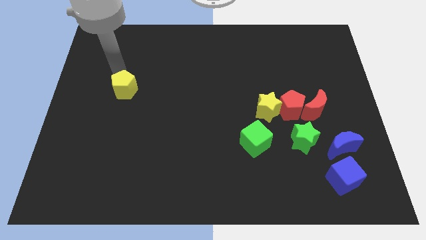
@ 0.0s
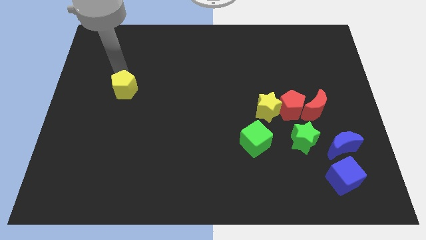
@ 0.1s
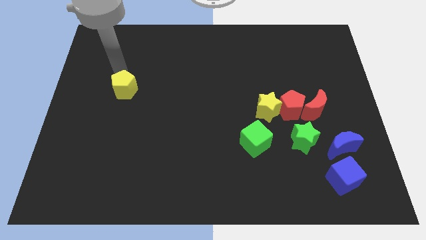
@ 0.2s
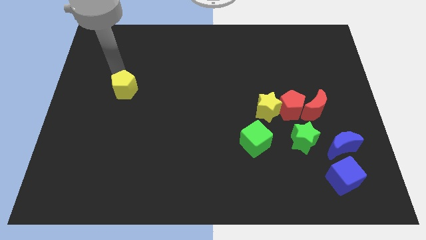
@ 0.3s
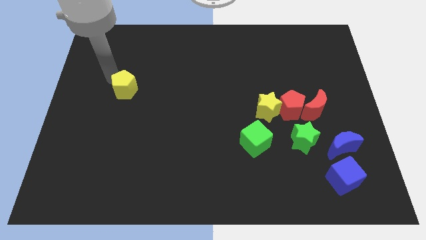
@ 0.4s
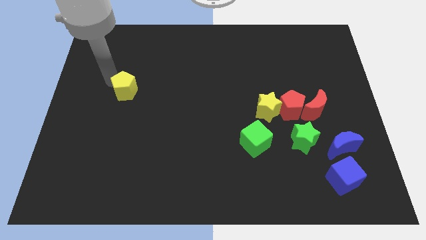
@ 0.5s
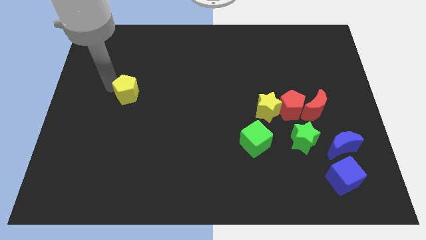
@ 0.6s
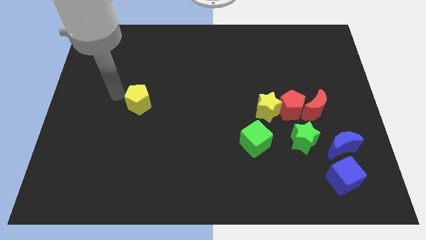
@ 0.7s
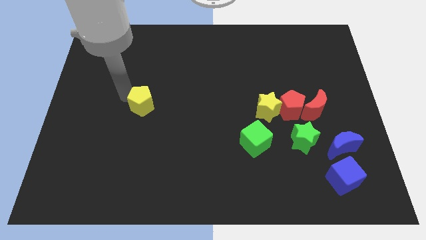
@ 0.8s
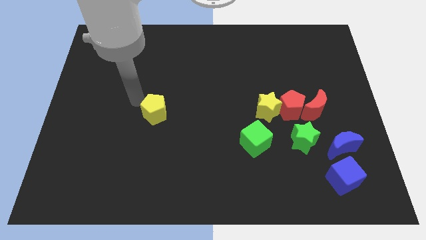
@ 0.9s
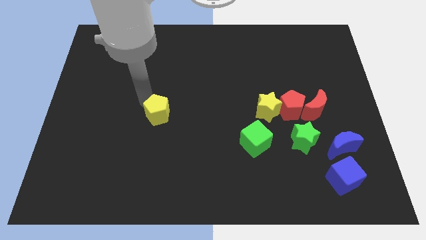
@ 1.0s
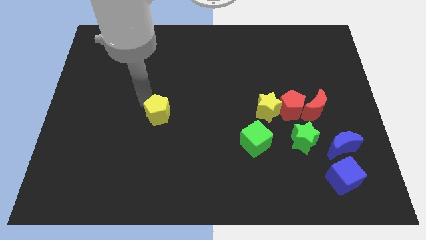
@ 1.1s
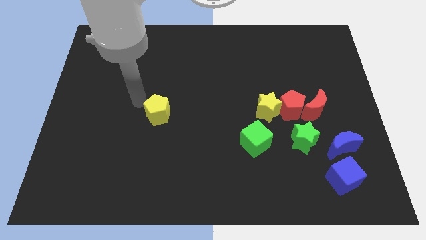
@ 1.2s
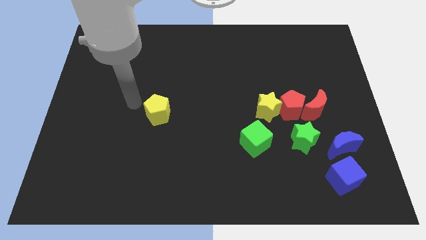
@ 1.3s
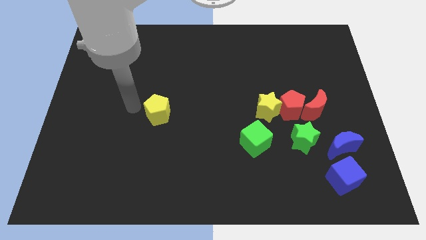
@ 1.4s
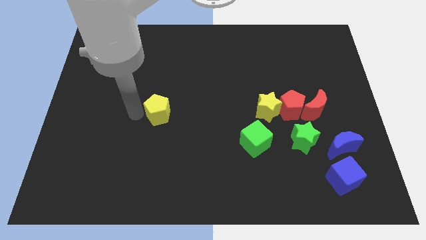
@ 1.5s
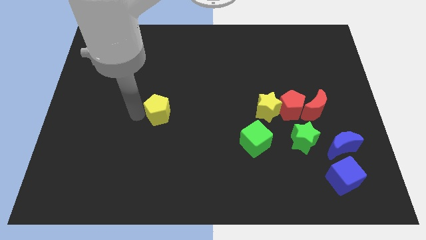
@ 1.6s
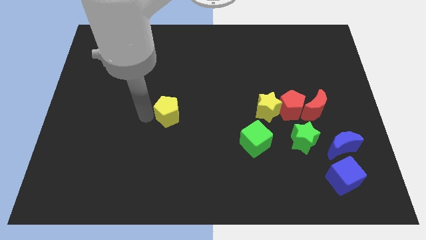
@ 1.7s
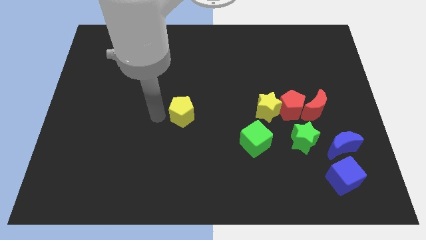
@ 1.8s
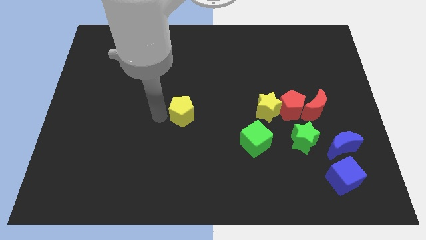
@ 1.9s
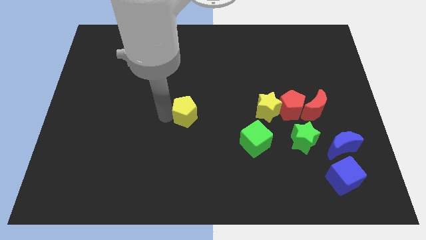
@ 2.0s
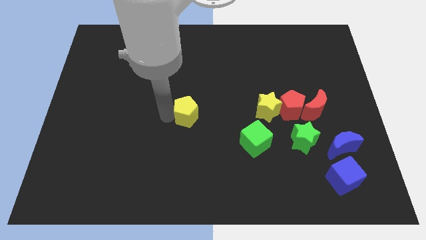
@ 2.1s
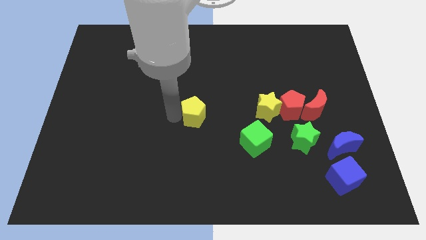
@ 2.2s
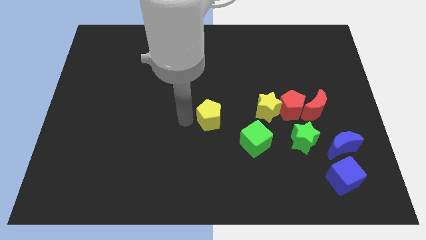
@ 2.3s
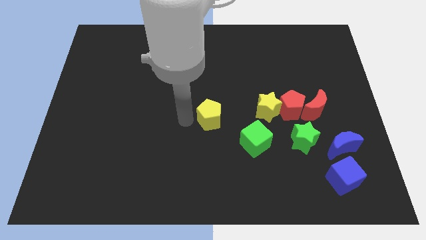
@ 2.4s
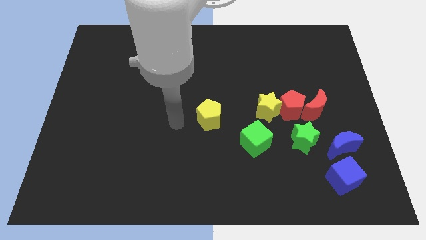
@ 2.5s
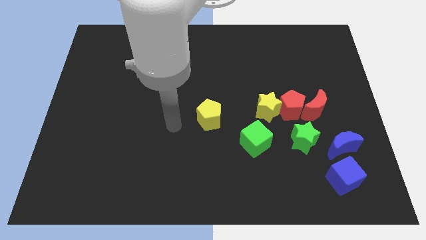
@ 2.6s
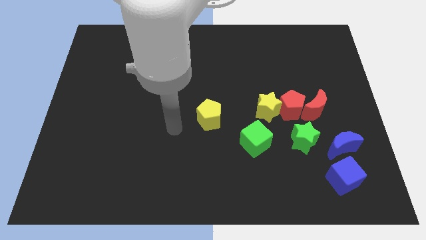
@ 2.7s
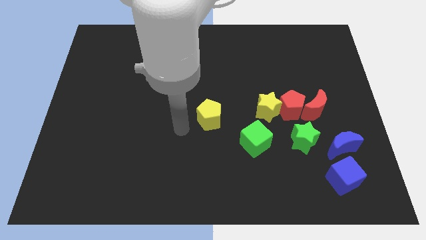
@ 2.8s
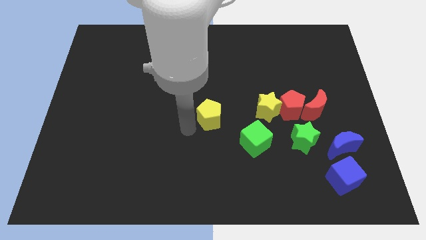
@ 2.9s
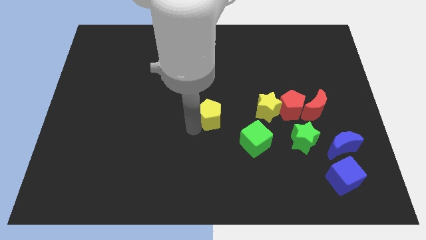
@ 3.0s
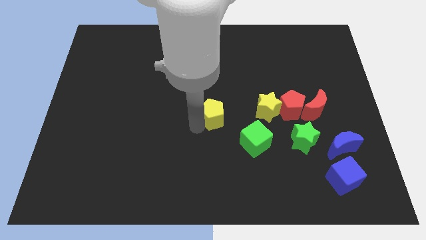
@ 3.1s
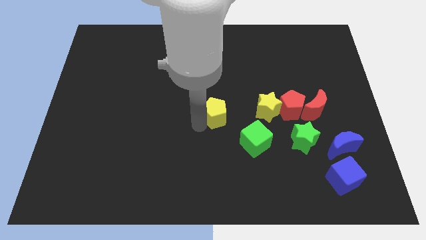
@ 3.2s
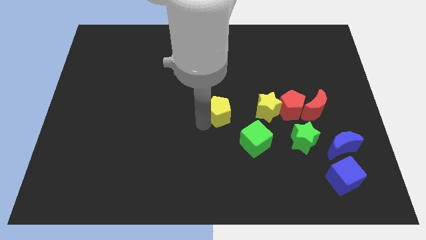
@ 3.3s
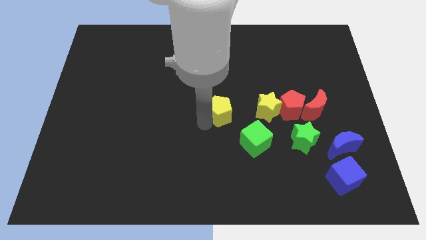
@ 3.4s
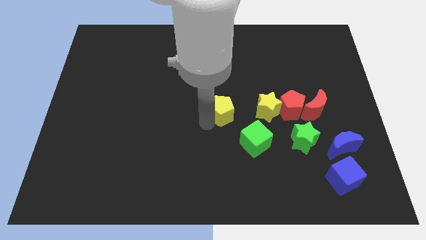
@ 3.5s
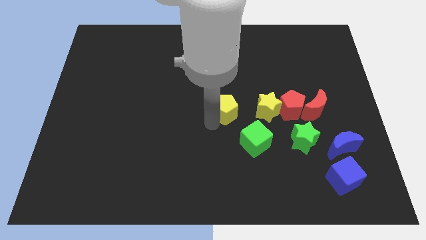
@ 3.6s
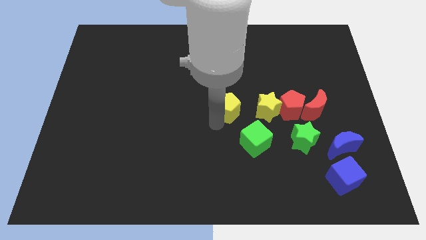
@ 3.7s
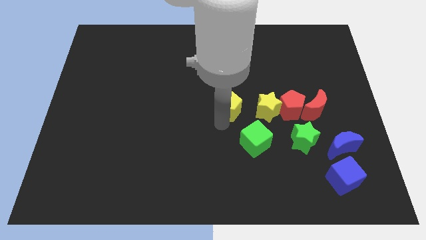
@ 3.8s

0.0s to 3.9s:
move the yellow pentagon close to the yellow star

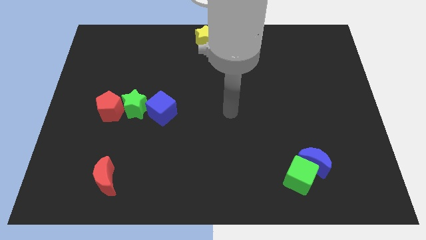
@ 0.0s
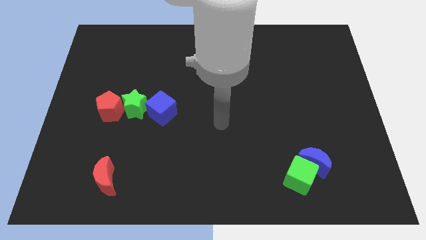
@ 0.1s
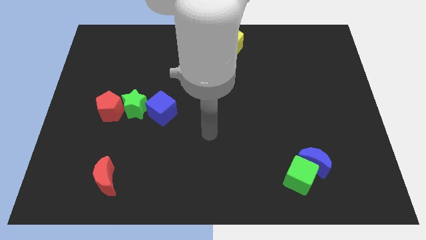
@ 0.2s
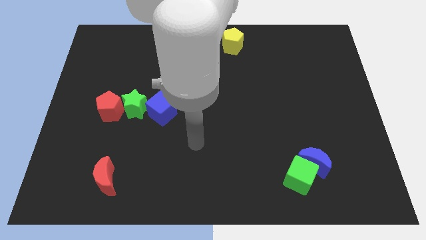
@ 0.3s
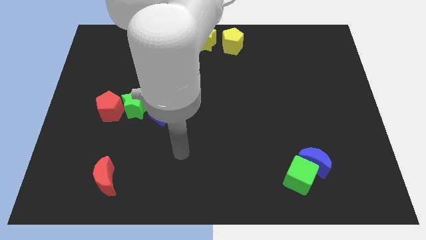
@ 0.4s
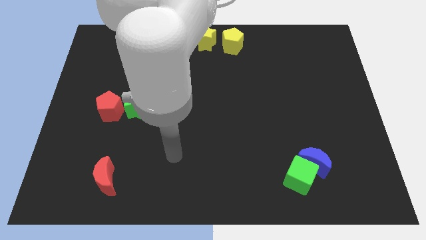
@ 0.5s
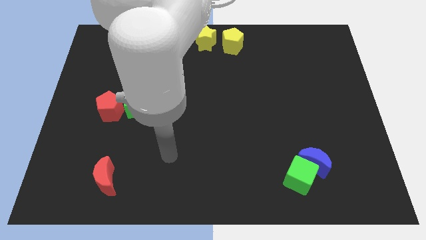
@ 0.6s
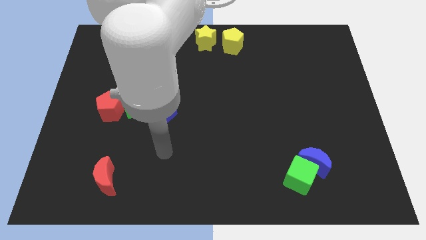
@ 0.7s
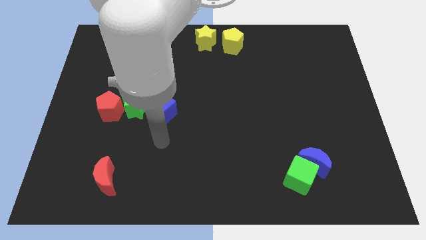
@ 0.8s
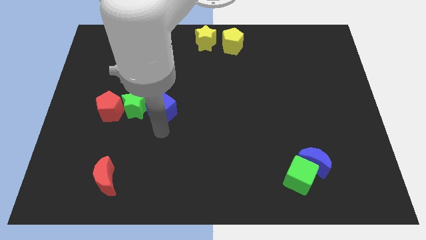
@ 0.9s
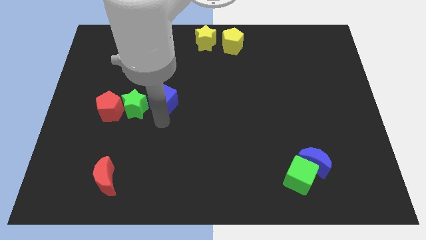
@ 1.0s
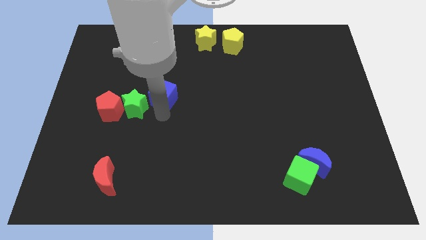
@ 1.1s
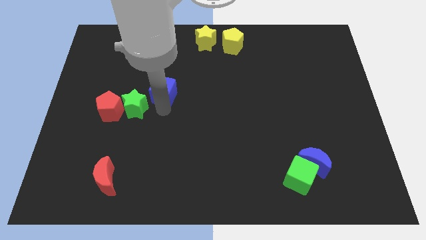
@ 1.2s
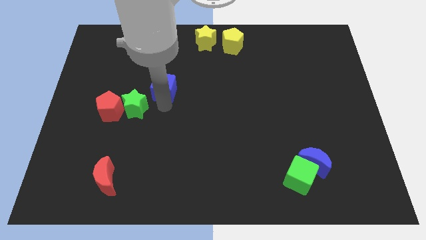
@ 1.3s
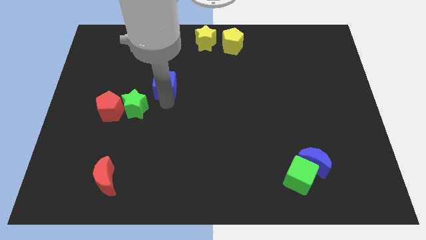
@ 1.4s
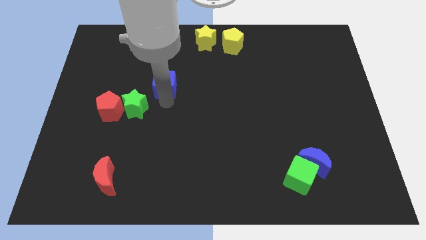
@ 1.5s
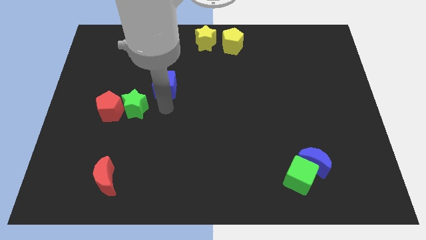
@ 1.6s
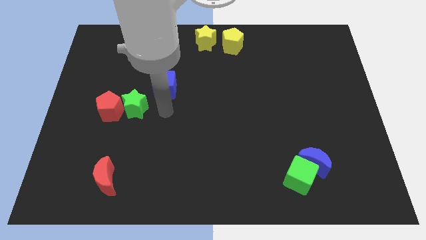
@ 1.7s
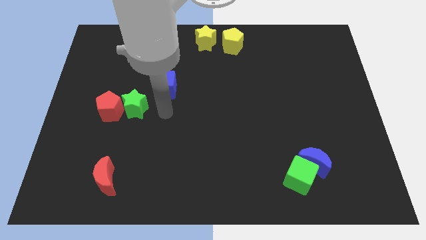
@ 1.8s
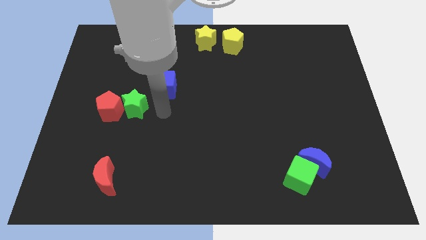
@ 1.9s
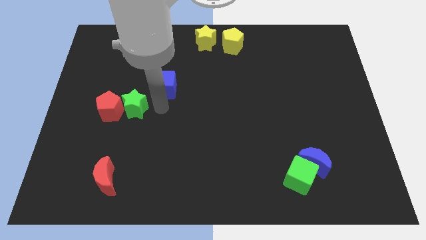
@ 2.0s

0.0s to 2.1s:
move the blue cube diagonally to the top right of the green star

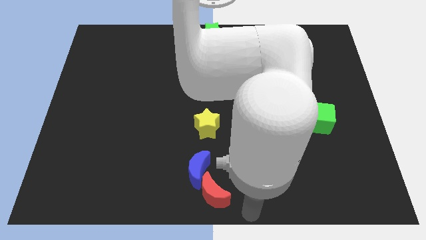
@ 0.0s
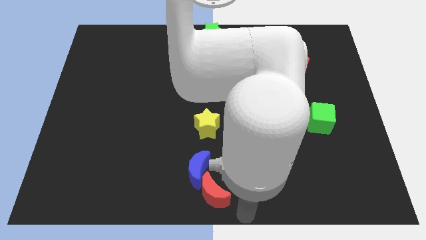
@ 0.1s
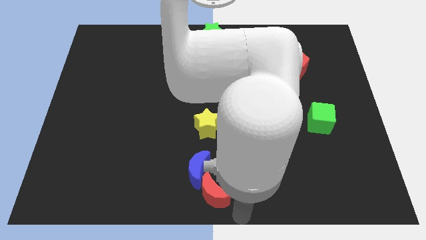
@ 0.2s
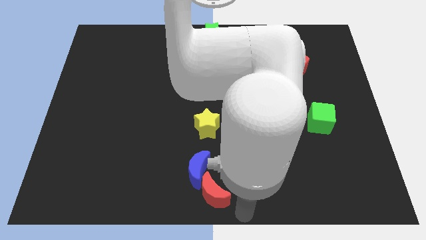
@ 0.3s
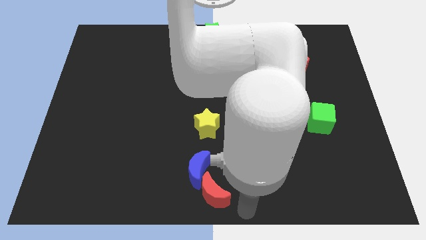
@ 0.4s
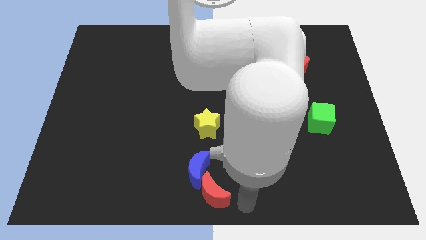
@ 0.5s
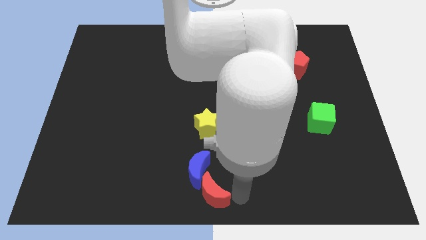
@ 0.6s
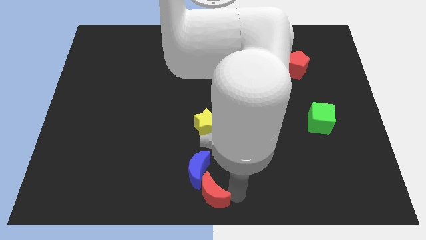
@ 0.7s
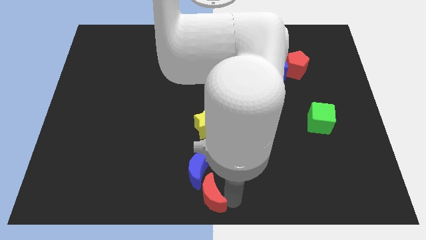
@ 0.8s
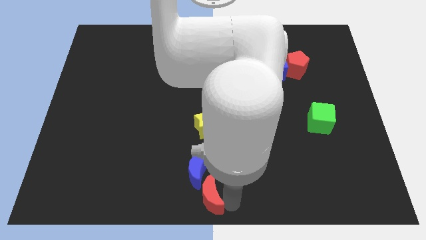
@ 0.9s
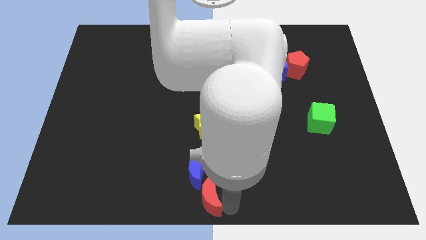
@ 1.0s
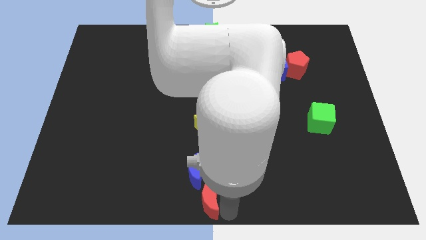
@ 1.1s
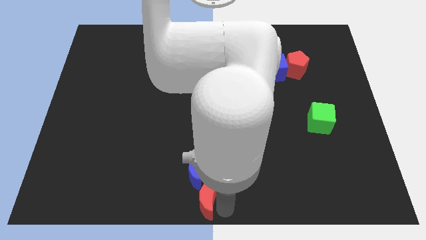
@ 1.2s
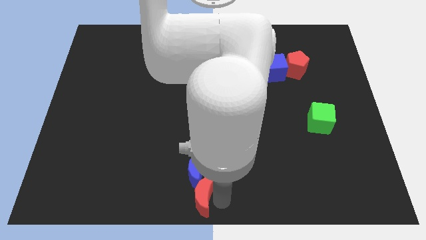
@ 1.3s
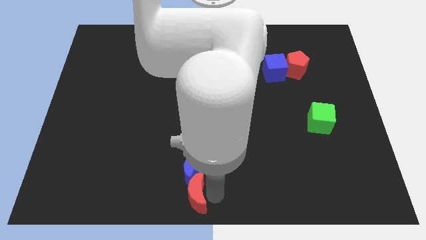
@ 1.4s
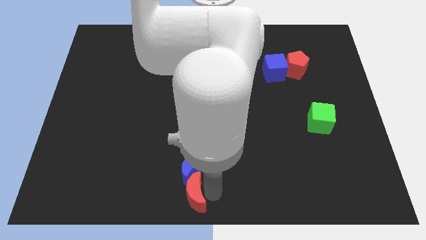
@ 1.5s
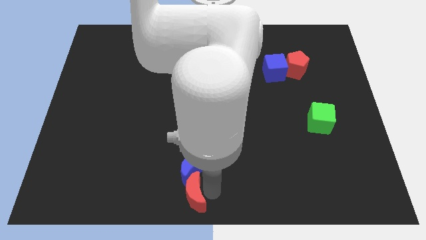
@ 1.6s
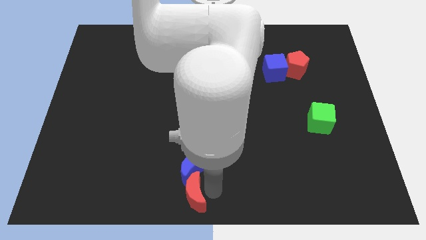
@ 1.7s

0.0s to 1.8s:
push the red crescent into the blue crescent

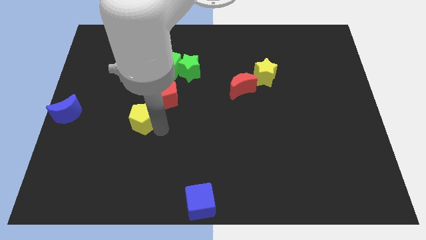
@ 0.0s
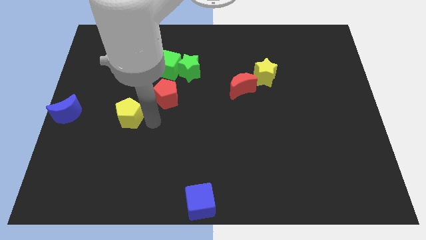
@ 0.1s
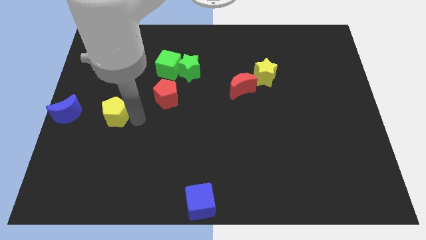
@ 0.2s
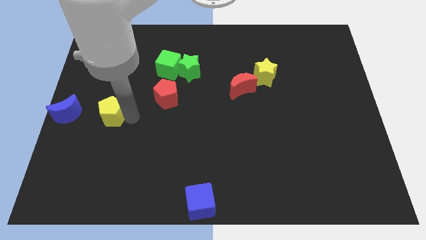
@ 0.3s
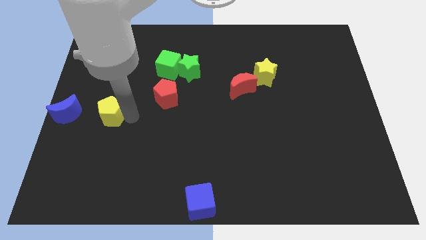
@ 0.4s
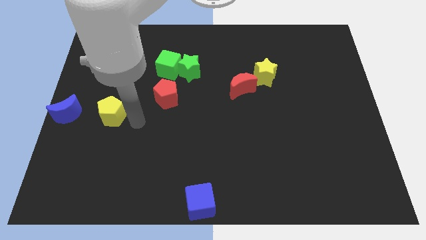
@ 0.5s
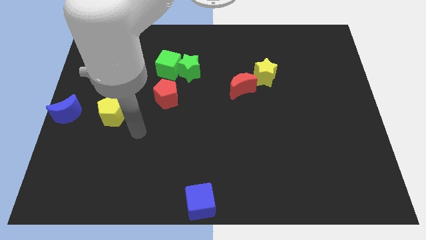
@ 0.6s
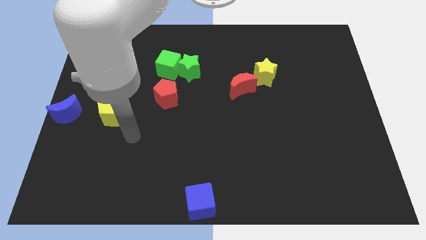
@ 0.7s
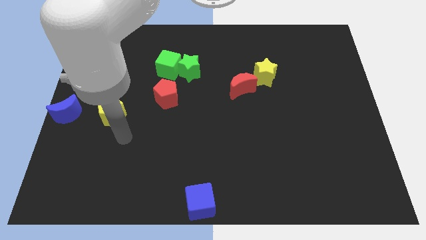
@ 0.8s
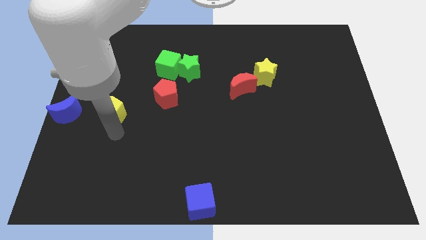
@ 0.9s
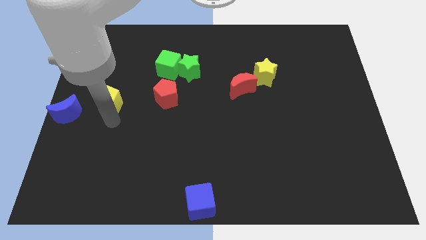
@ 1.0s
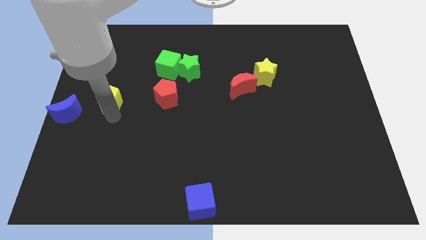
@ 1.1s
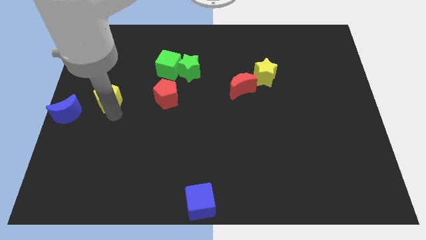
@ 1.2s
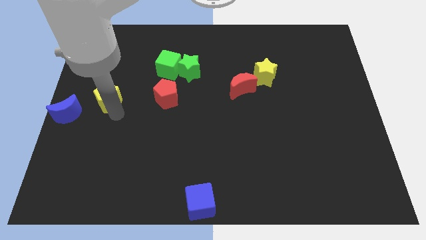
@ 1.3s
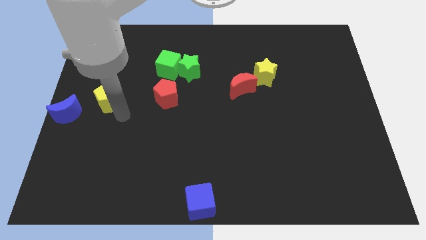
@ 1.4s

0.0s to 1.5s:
place the yellow pentagon left to the red pentagon
